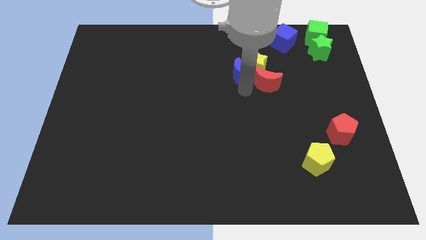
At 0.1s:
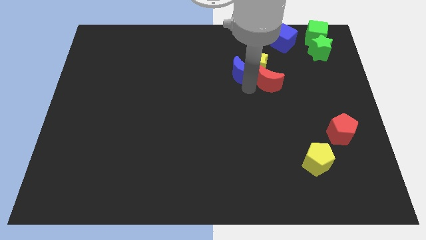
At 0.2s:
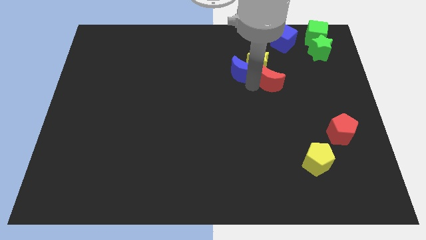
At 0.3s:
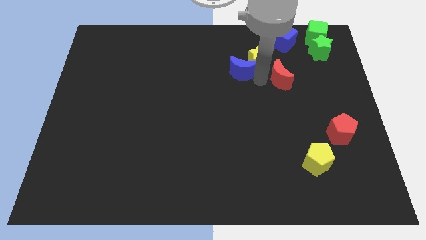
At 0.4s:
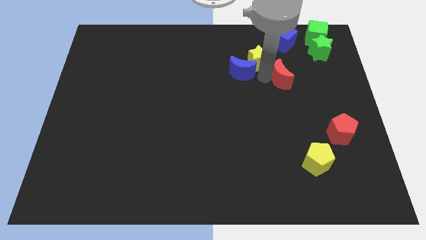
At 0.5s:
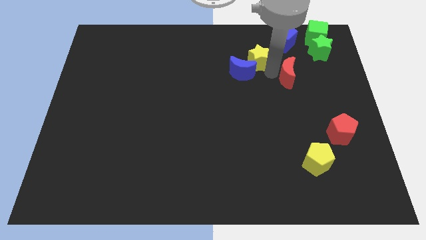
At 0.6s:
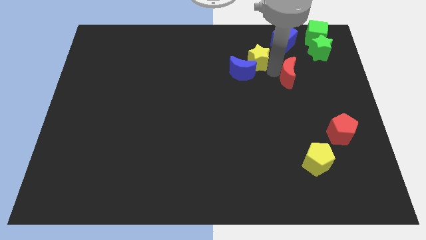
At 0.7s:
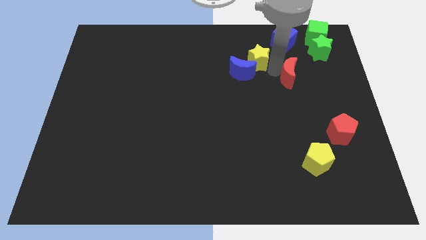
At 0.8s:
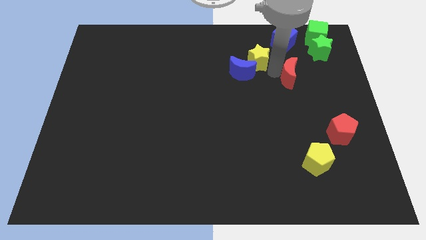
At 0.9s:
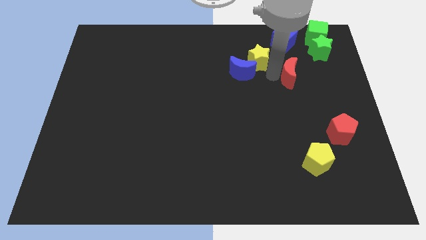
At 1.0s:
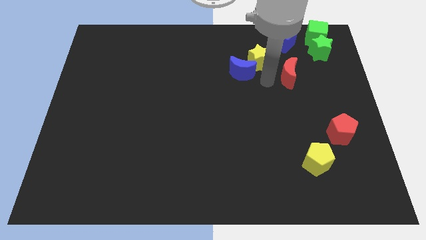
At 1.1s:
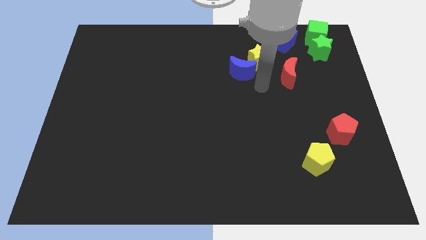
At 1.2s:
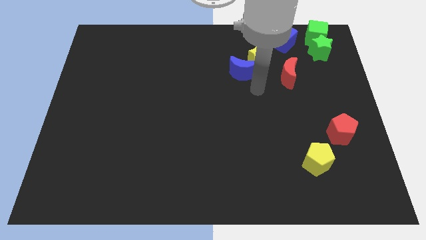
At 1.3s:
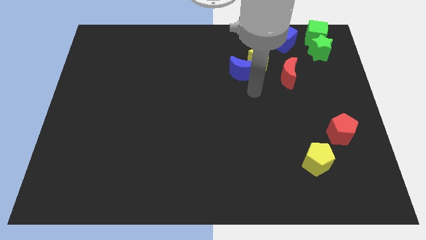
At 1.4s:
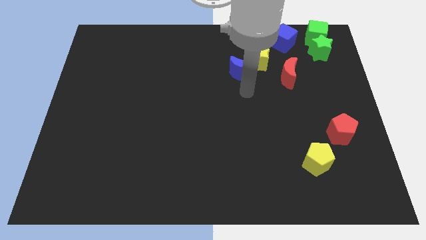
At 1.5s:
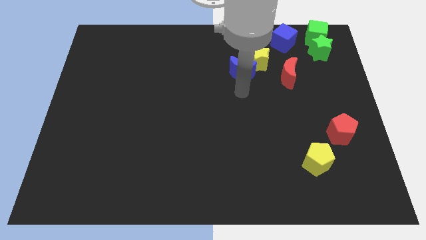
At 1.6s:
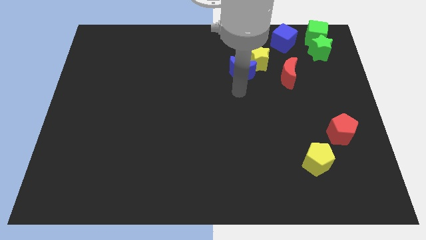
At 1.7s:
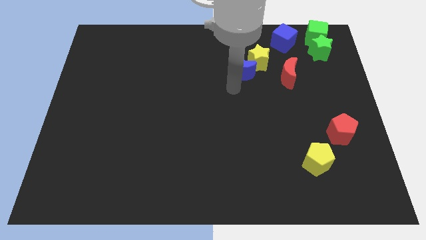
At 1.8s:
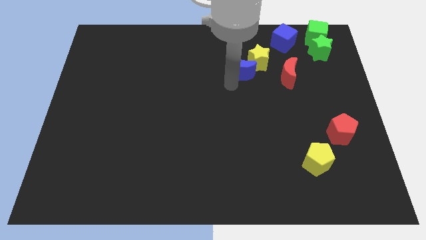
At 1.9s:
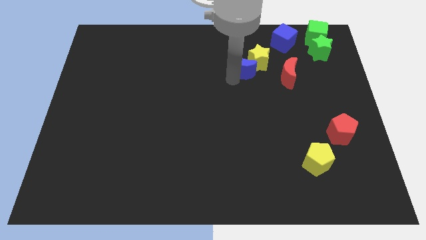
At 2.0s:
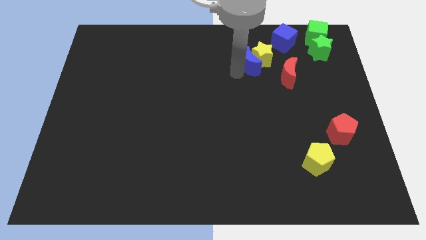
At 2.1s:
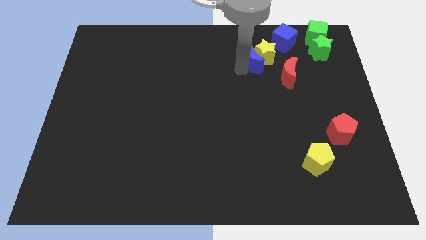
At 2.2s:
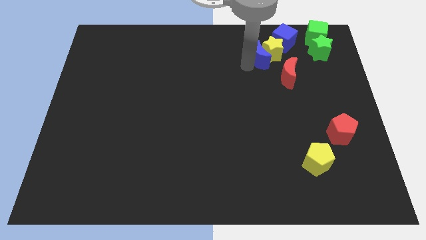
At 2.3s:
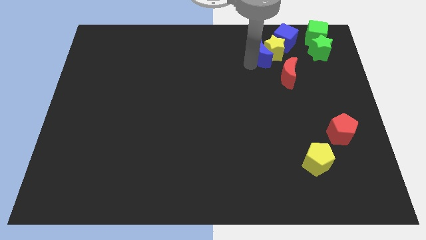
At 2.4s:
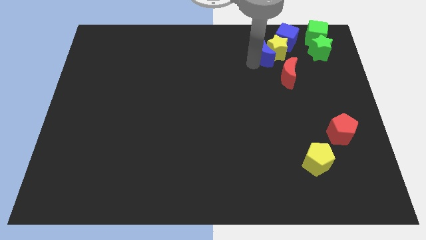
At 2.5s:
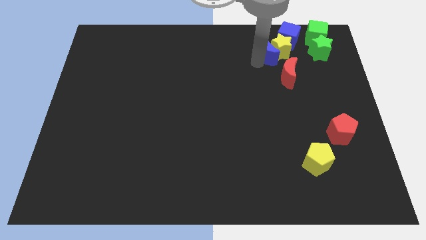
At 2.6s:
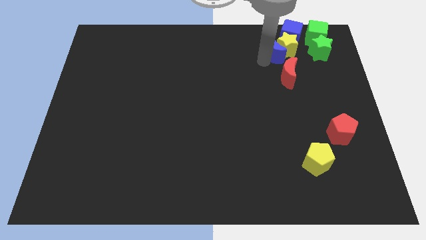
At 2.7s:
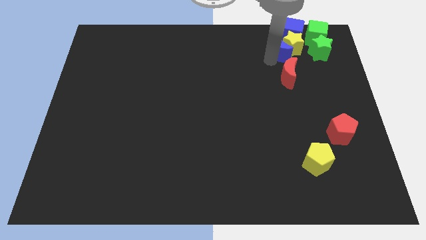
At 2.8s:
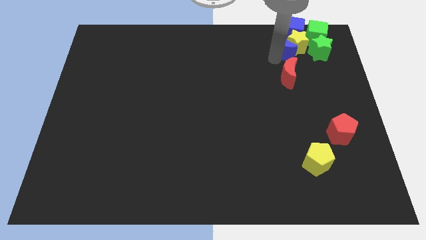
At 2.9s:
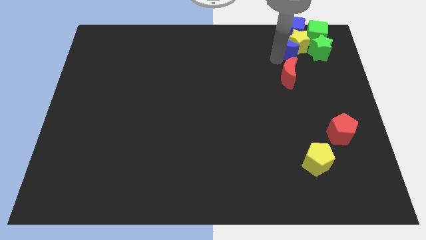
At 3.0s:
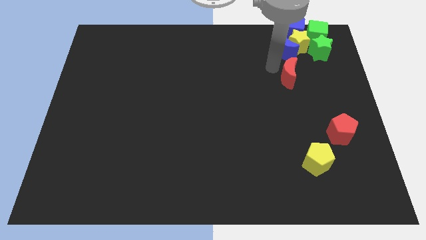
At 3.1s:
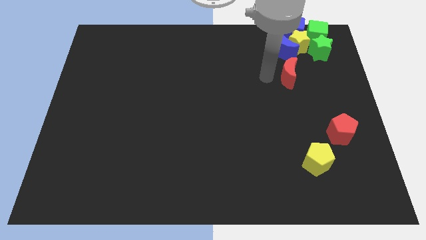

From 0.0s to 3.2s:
push the blue moon and the yellow star into the group of blocks

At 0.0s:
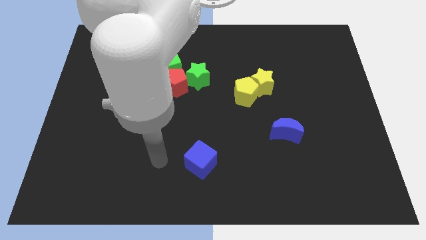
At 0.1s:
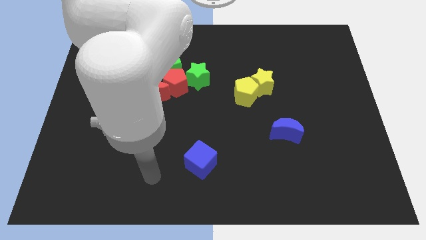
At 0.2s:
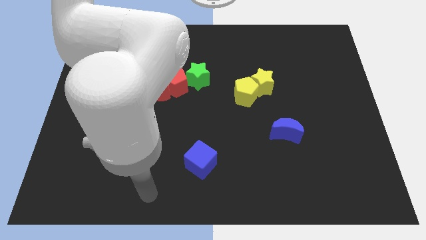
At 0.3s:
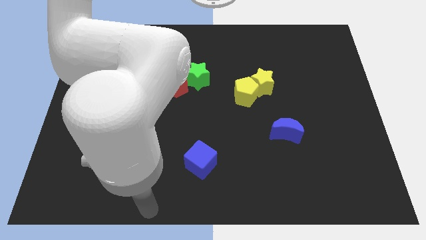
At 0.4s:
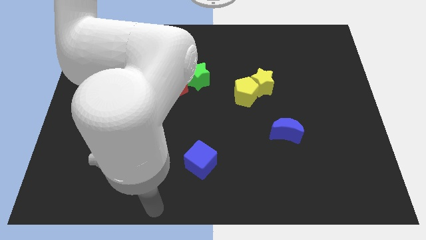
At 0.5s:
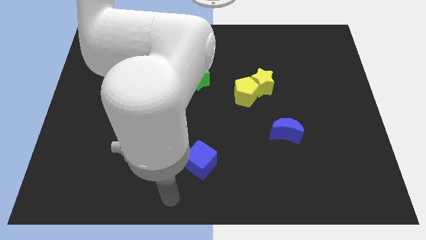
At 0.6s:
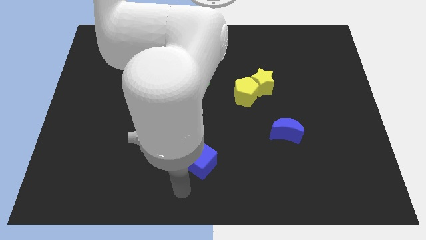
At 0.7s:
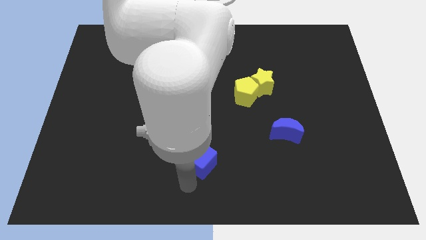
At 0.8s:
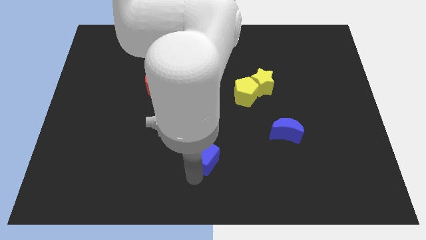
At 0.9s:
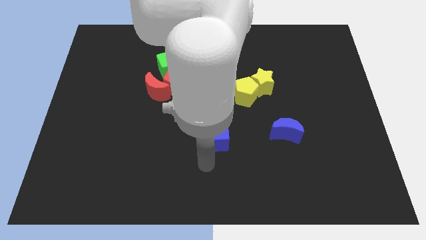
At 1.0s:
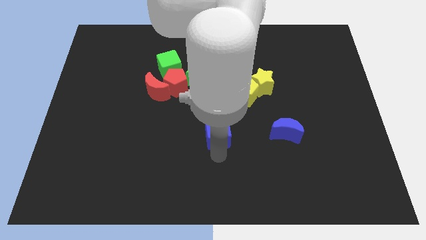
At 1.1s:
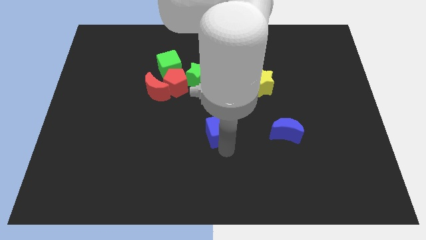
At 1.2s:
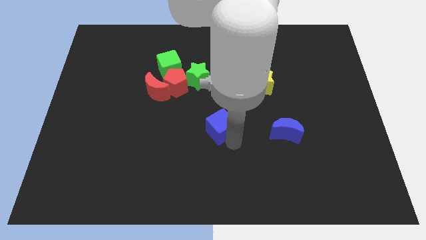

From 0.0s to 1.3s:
place blue cube to the top of the blue crescent

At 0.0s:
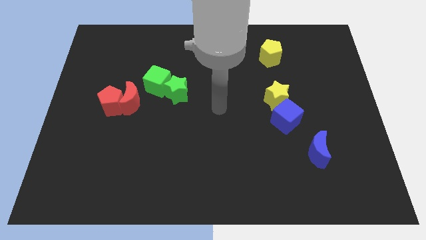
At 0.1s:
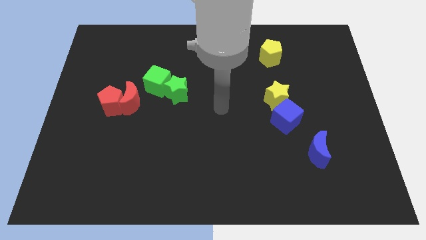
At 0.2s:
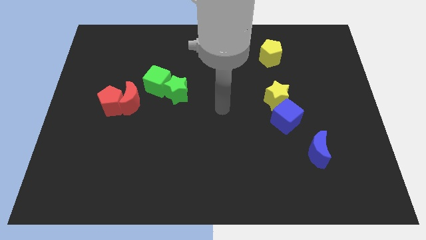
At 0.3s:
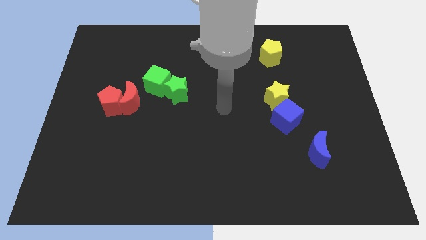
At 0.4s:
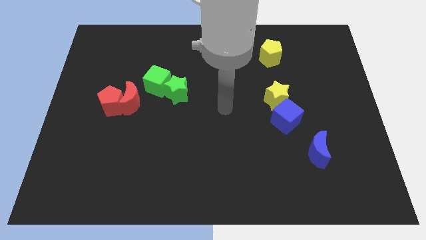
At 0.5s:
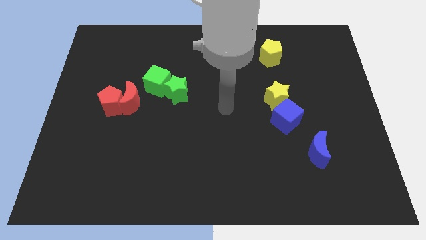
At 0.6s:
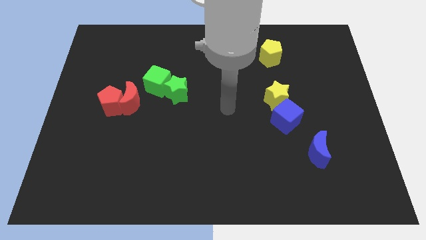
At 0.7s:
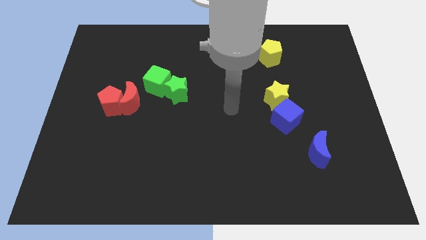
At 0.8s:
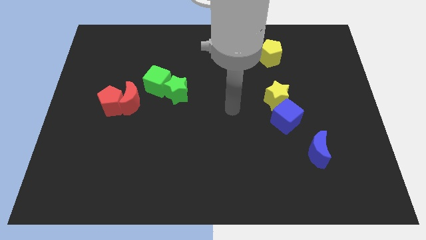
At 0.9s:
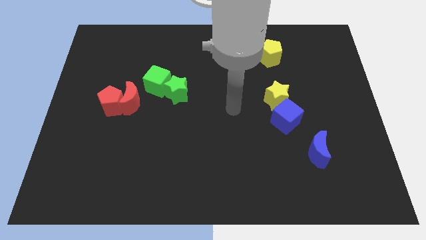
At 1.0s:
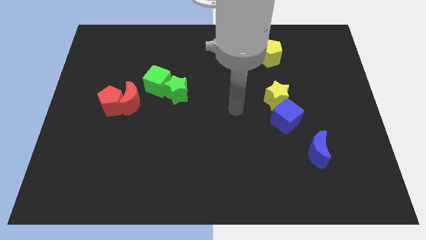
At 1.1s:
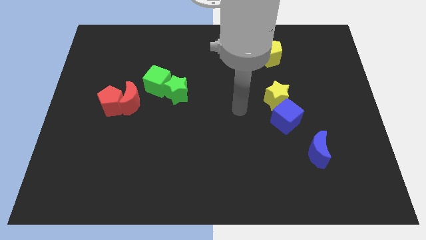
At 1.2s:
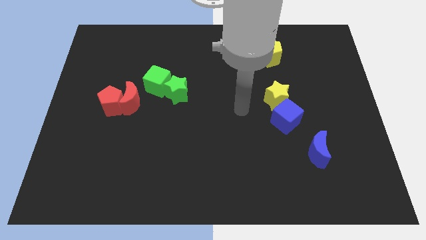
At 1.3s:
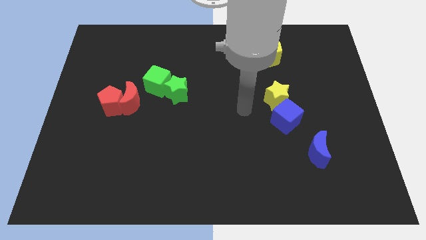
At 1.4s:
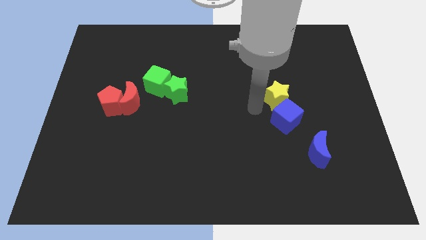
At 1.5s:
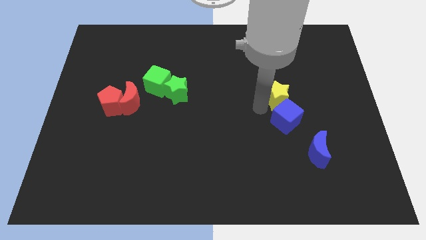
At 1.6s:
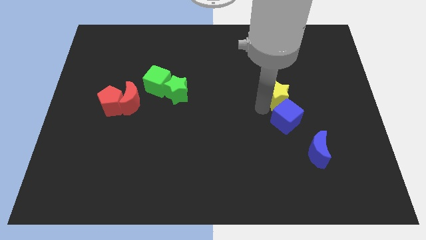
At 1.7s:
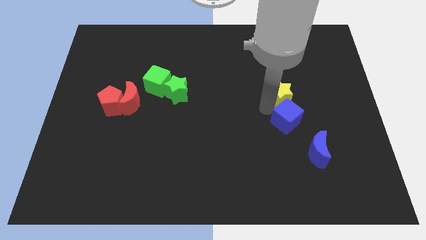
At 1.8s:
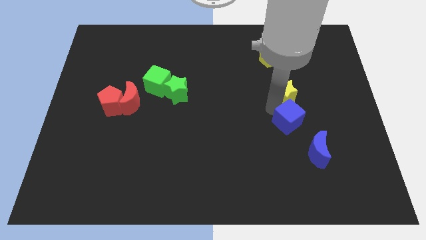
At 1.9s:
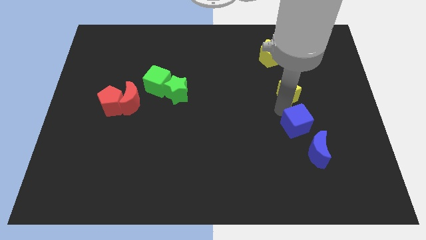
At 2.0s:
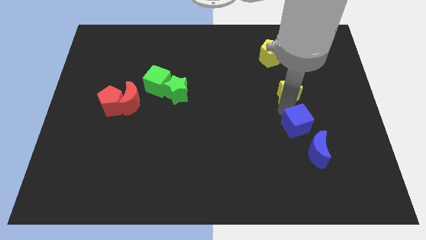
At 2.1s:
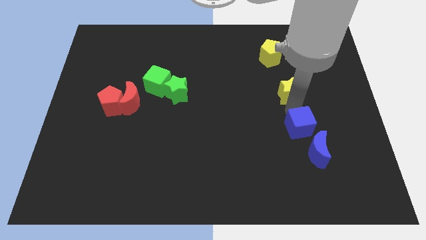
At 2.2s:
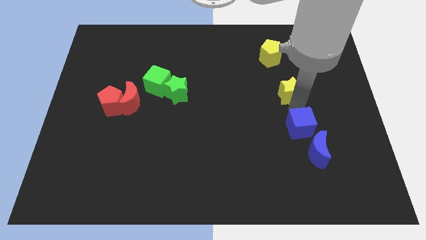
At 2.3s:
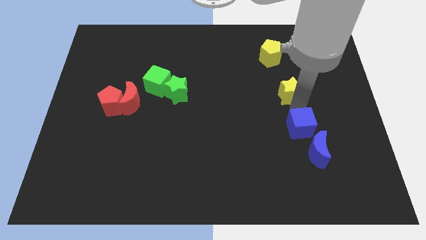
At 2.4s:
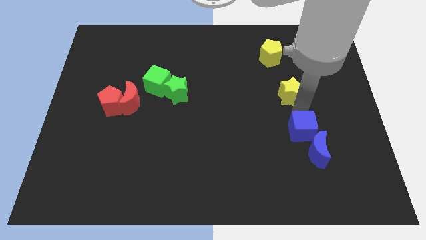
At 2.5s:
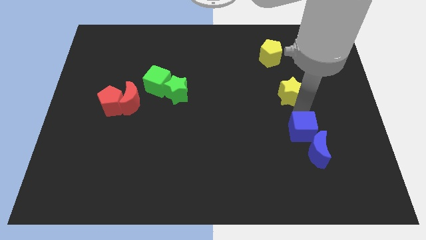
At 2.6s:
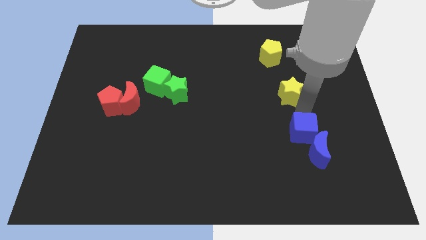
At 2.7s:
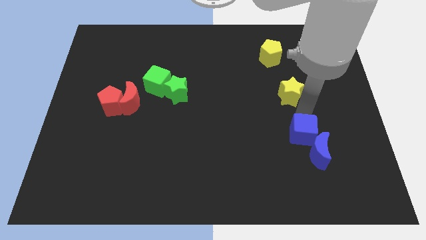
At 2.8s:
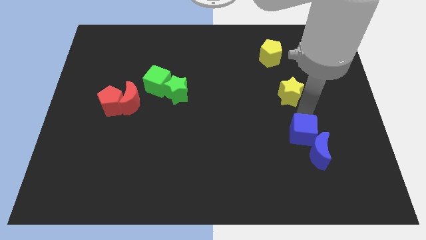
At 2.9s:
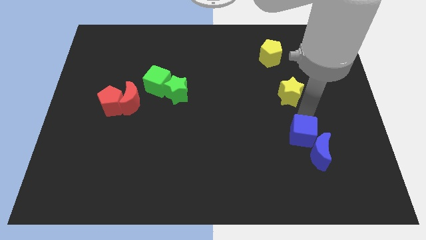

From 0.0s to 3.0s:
drag the blue cube slightly downwards

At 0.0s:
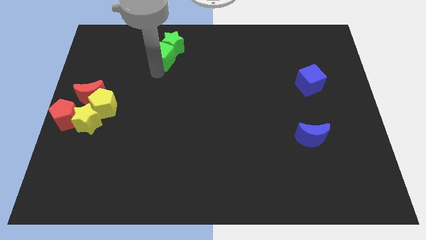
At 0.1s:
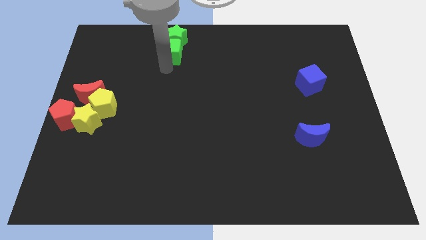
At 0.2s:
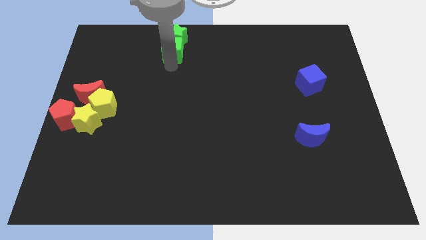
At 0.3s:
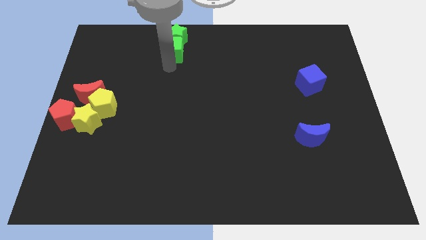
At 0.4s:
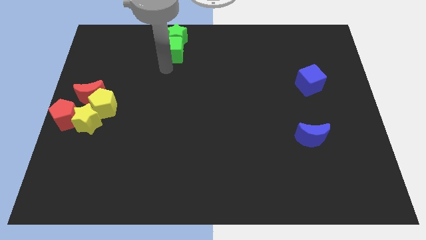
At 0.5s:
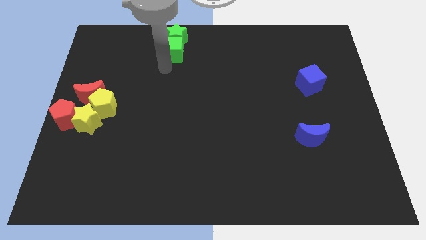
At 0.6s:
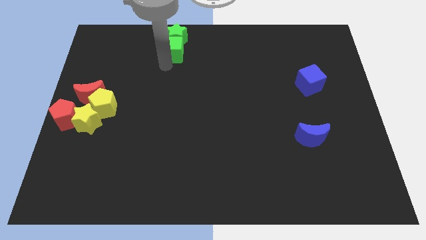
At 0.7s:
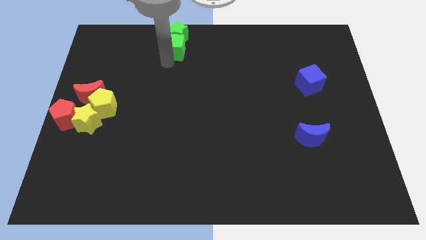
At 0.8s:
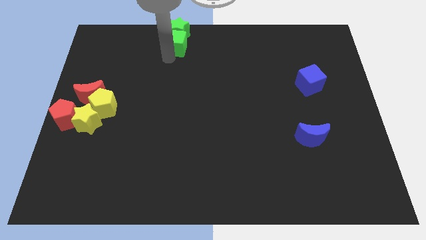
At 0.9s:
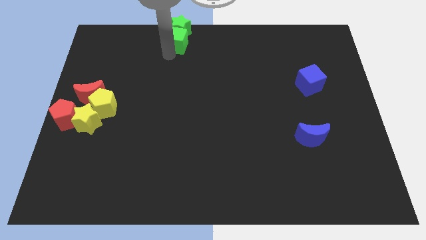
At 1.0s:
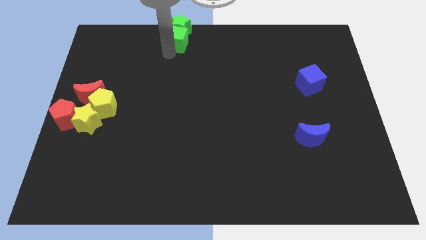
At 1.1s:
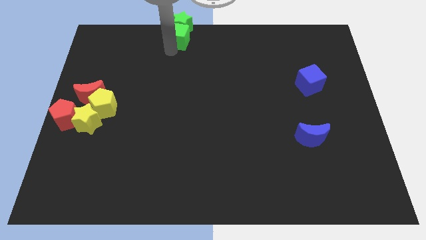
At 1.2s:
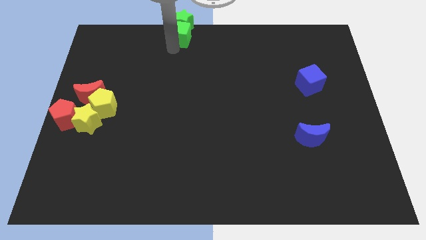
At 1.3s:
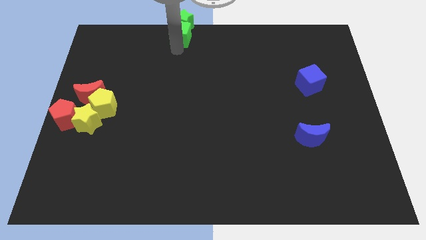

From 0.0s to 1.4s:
push the green cube and green star towards the top center side of the board
